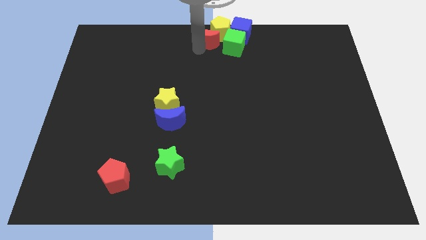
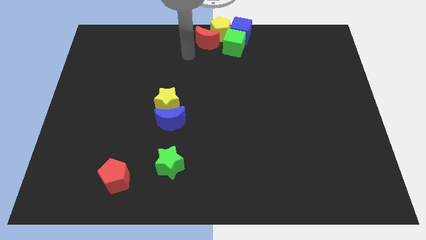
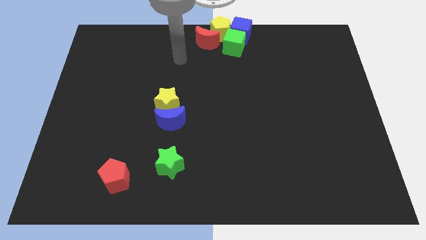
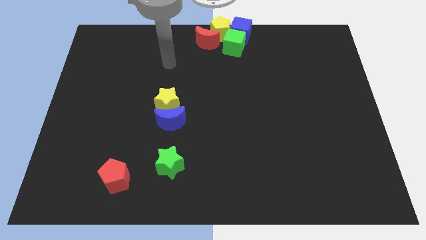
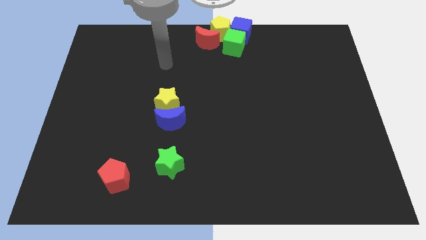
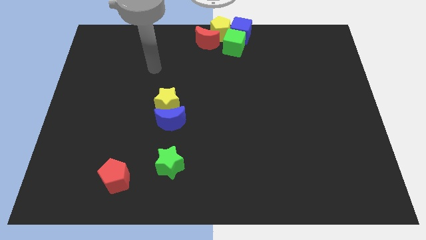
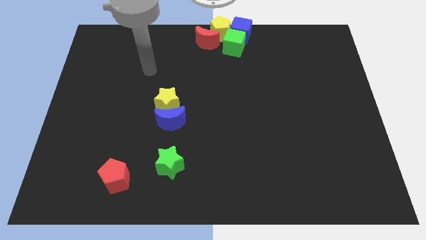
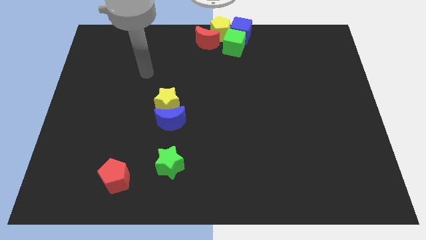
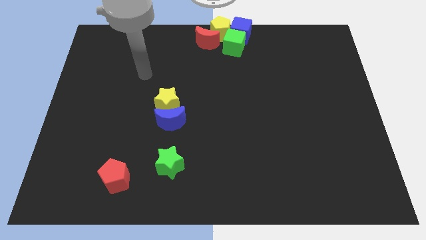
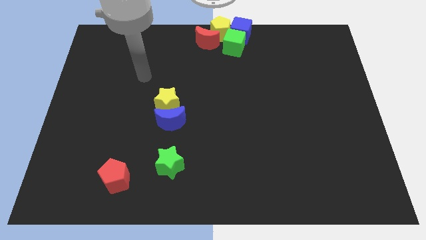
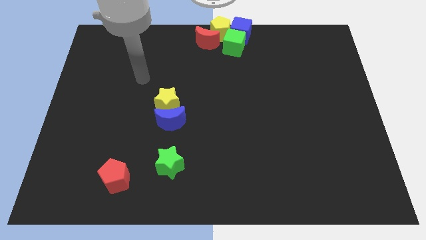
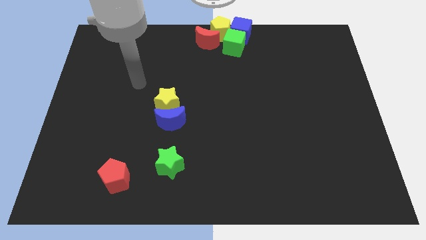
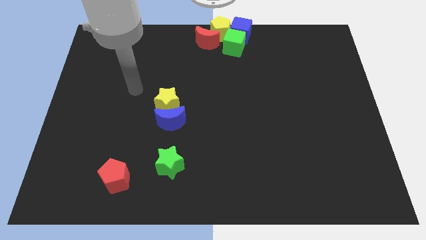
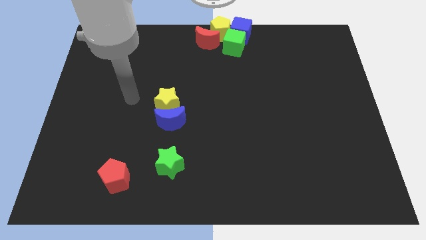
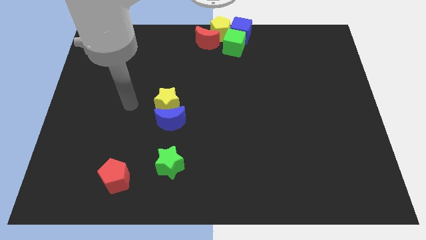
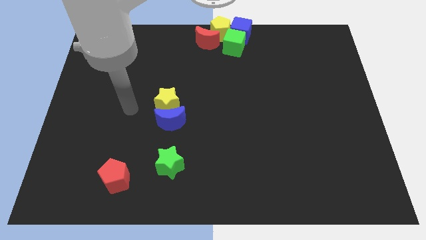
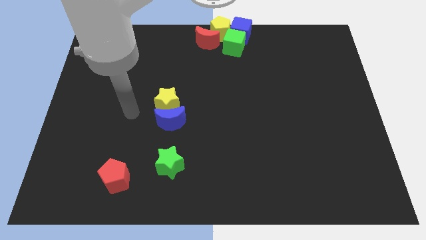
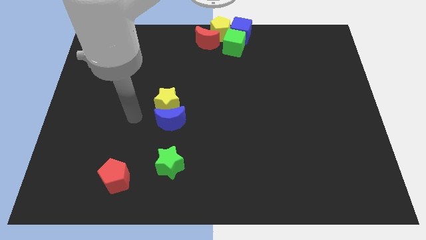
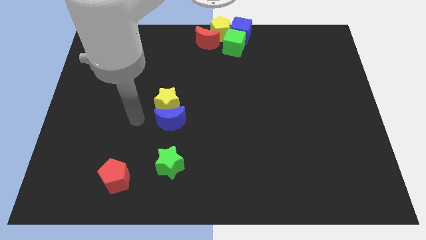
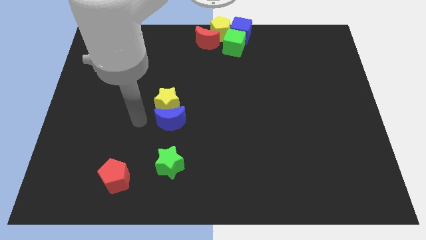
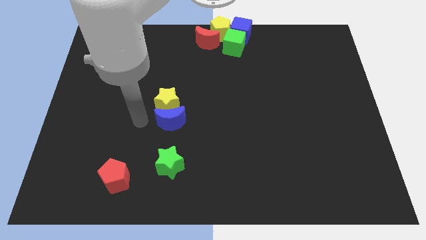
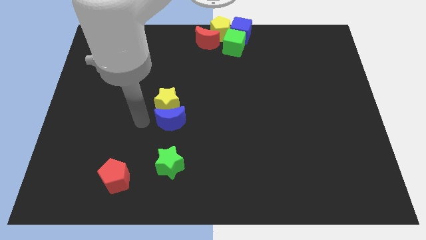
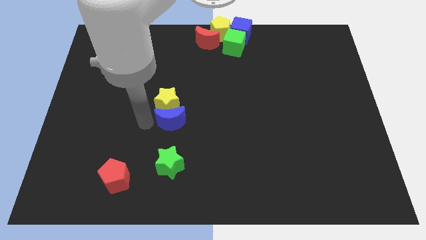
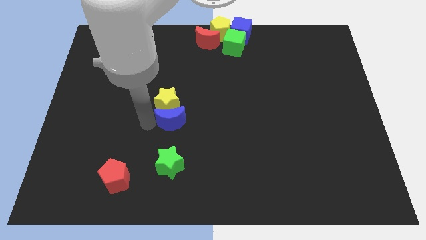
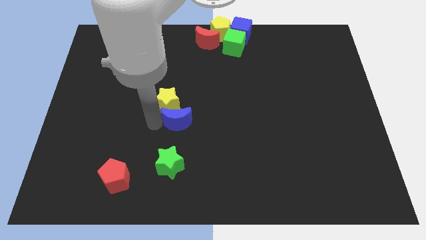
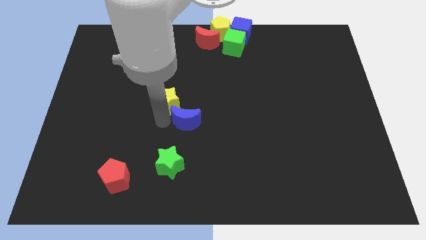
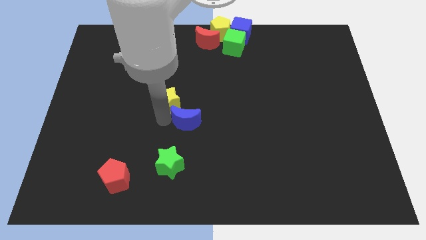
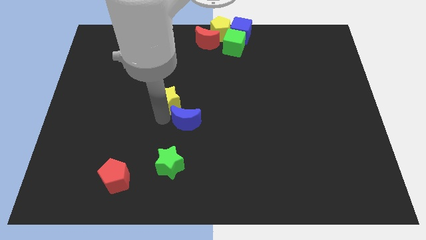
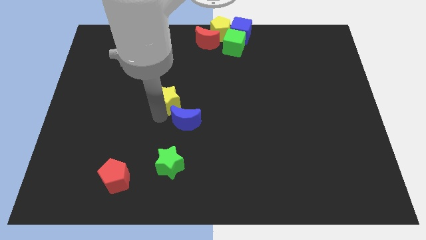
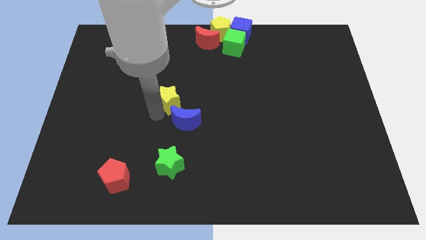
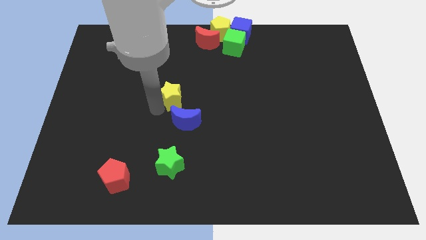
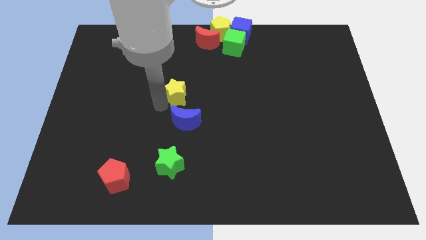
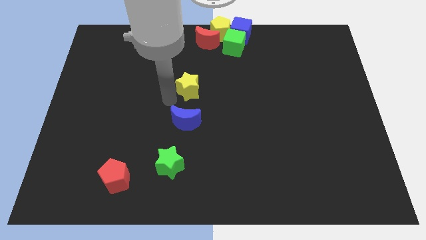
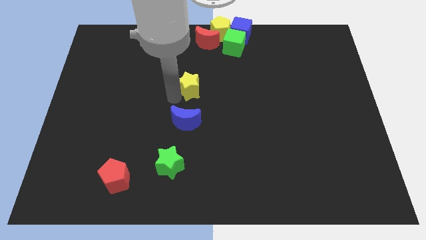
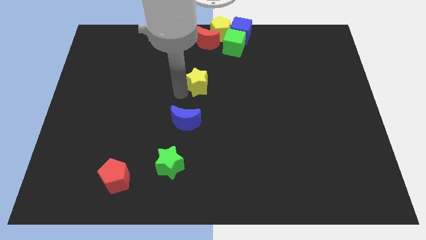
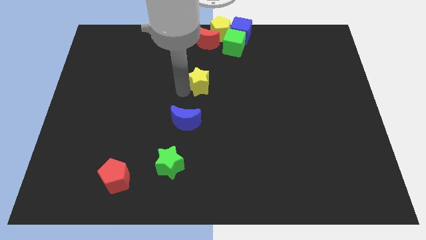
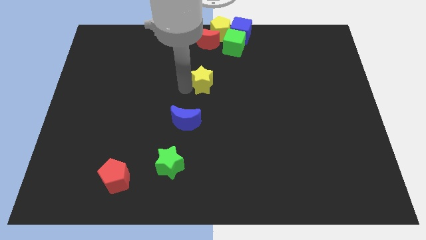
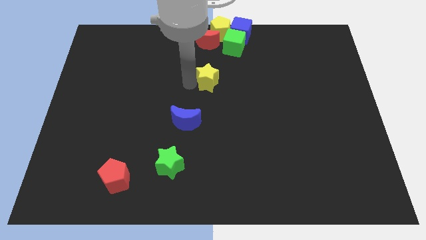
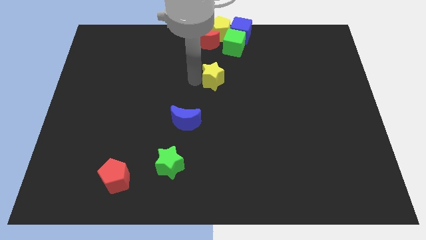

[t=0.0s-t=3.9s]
place the yellow star diaonally top right to the blue moon

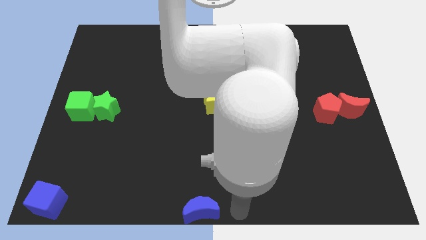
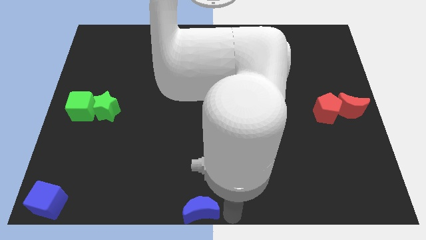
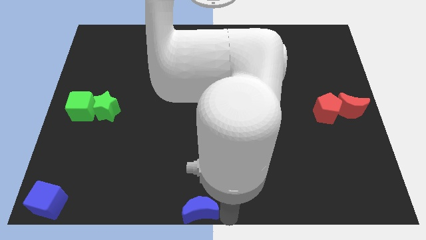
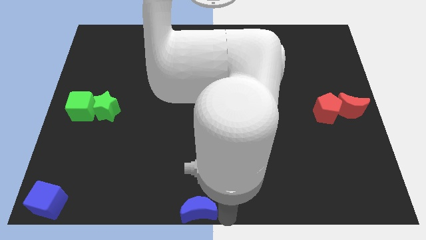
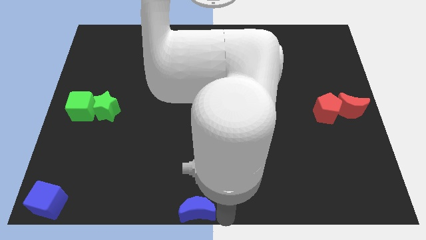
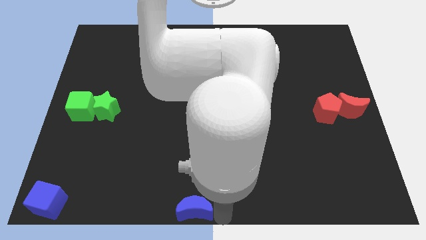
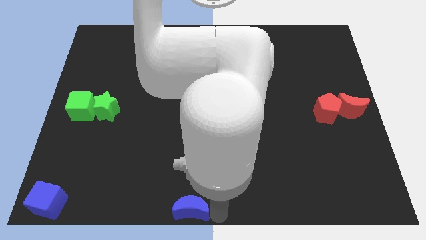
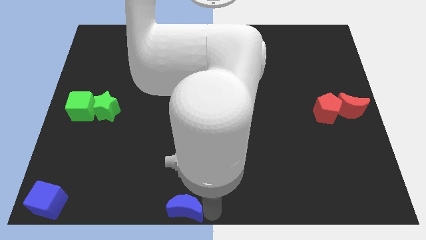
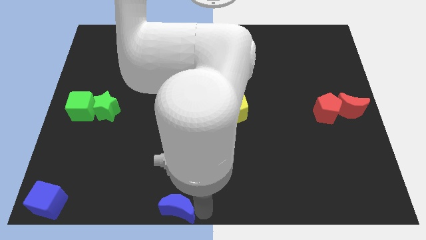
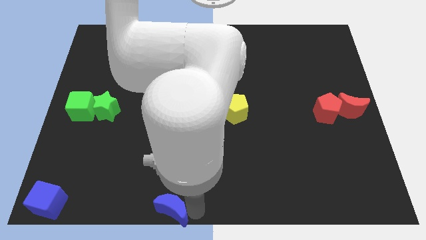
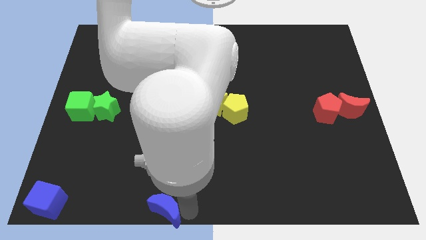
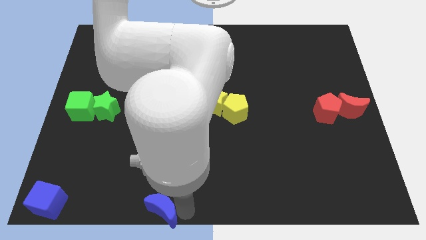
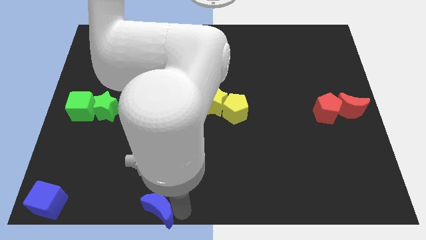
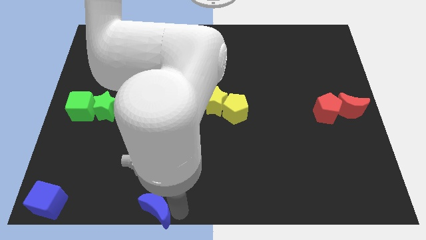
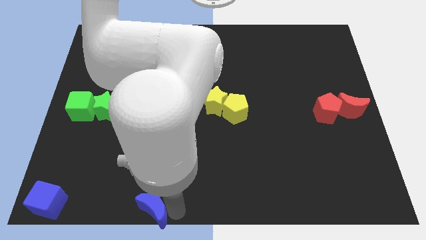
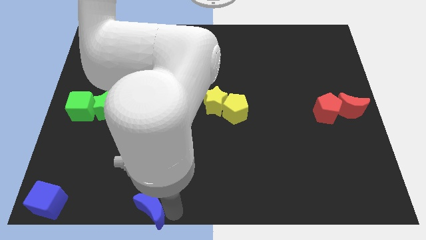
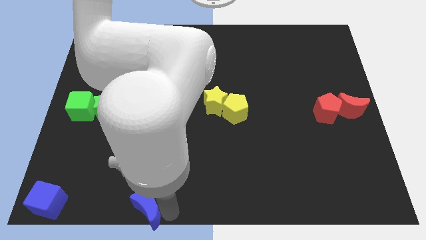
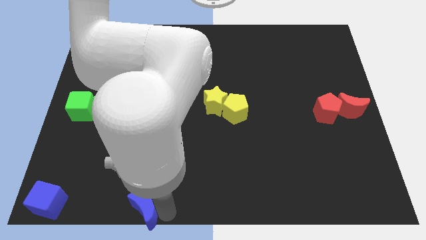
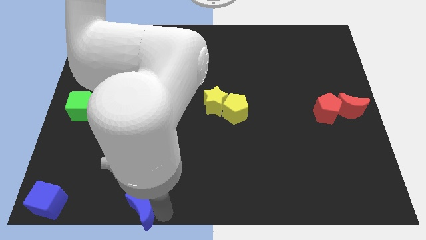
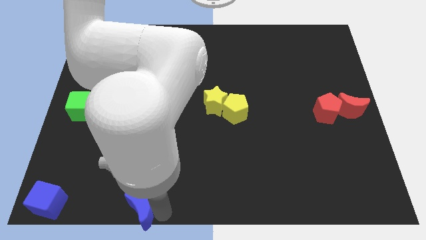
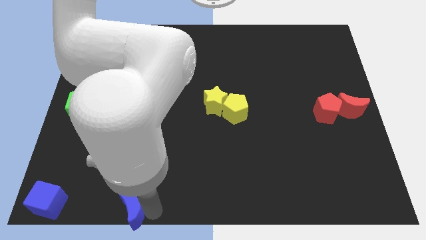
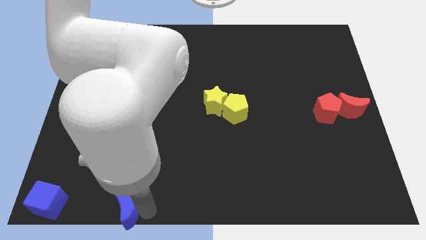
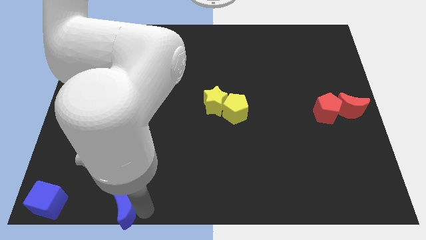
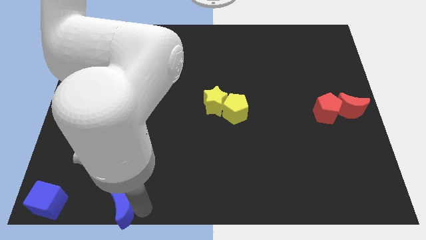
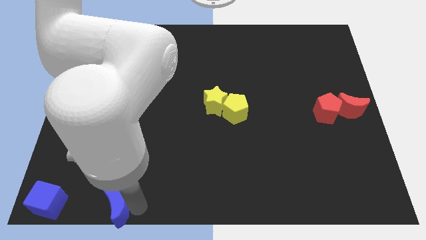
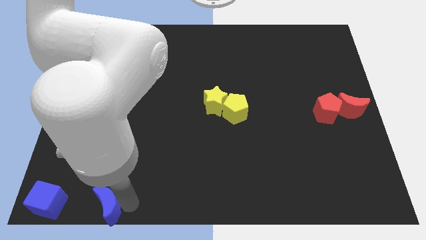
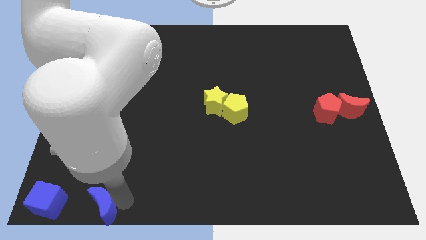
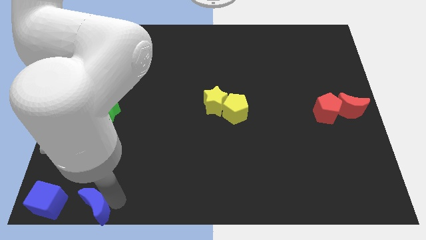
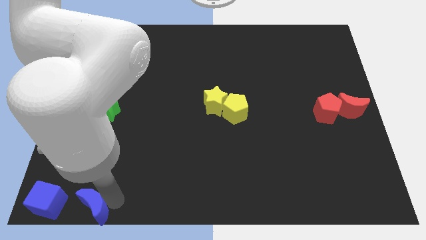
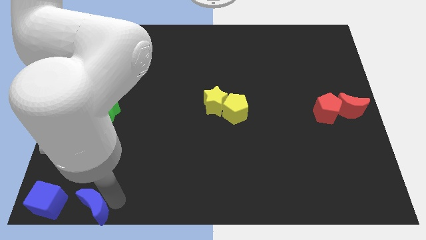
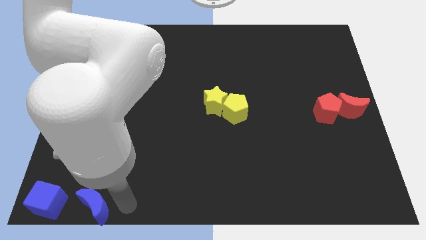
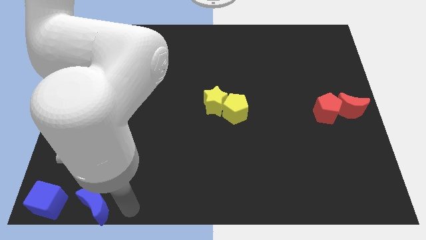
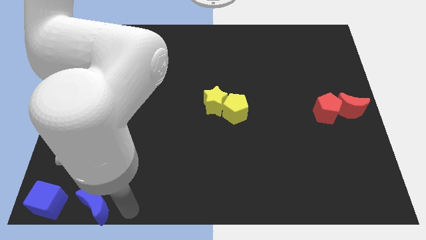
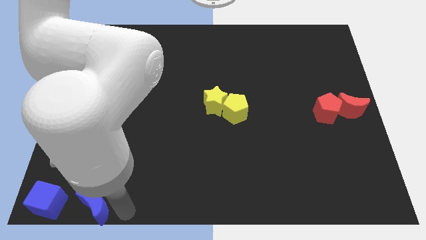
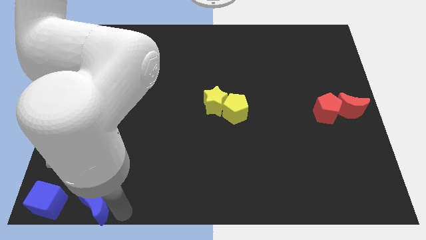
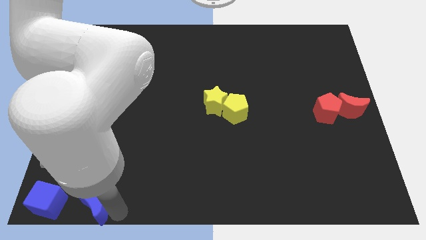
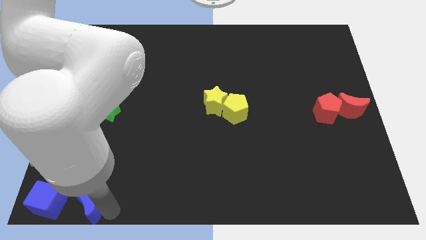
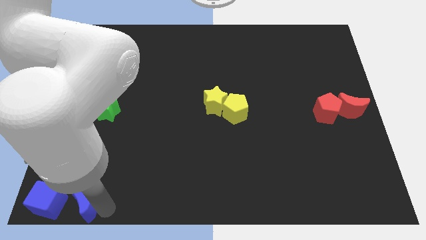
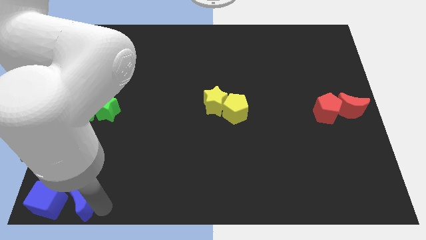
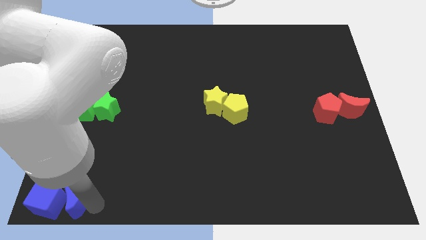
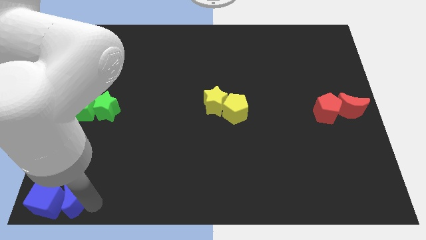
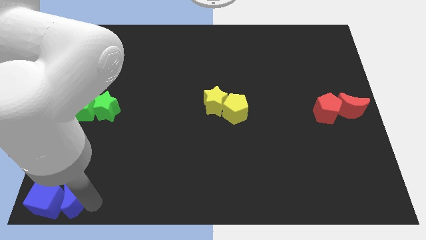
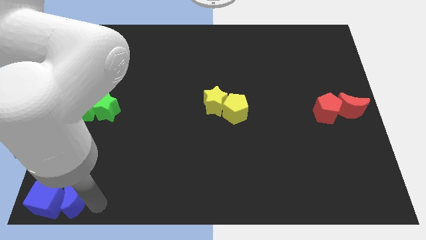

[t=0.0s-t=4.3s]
move the blue crescent close to the right side of teh blue cube

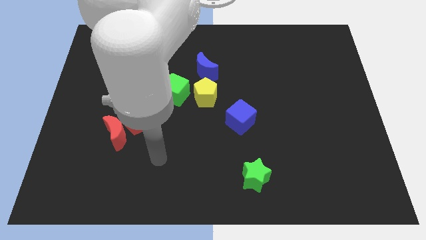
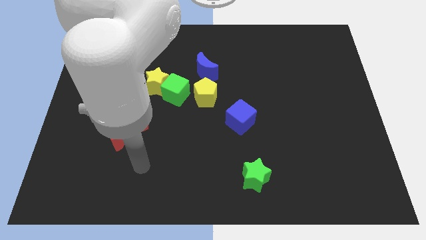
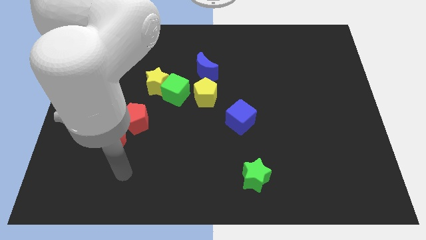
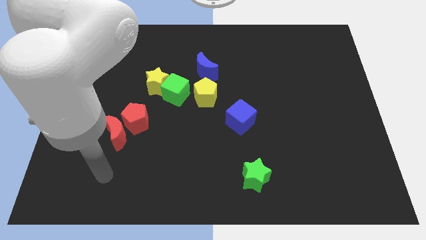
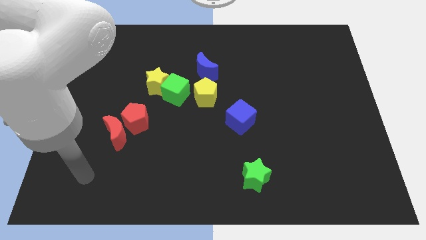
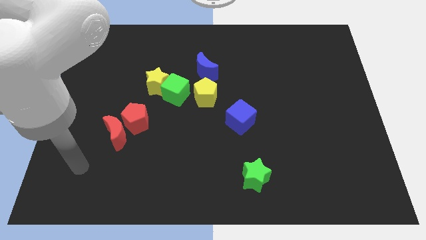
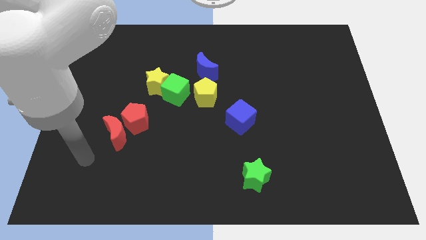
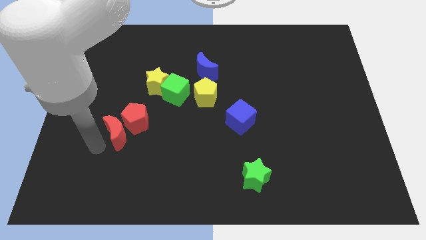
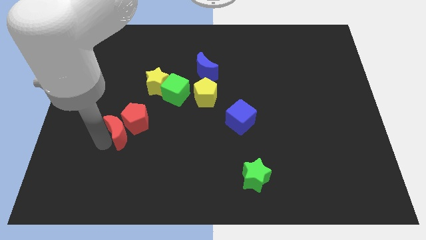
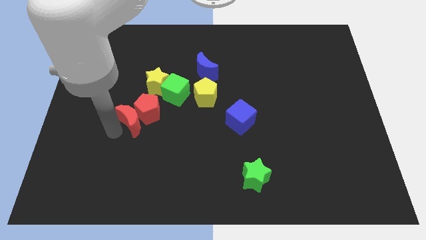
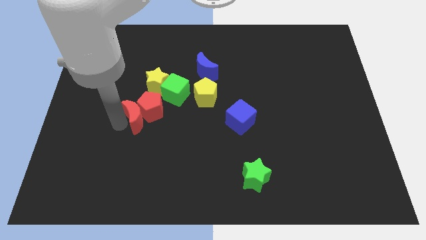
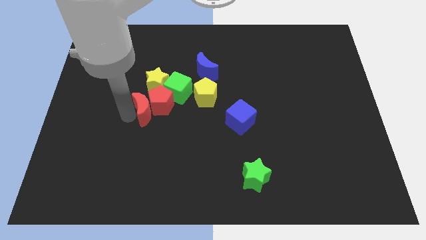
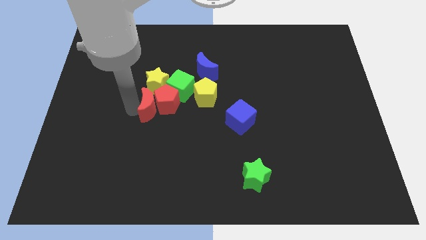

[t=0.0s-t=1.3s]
move the red blocks towards the green cube
